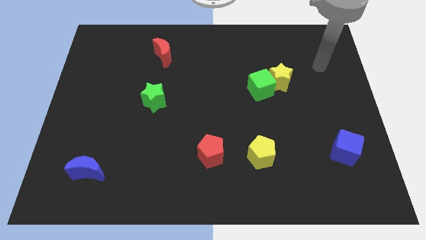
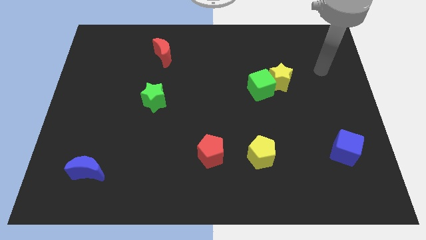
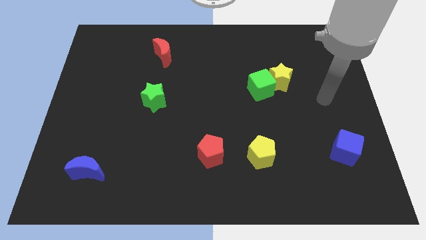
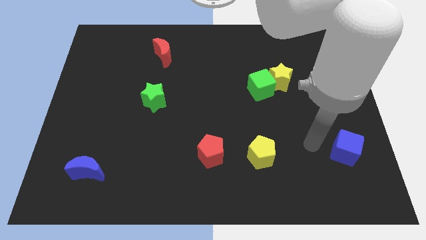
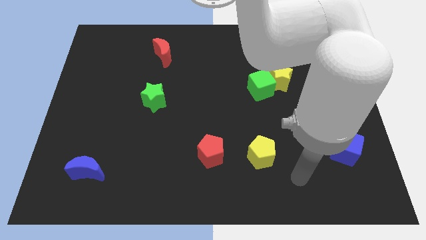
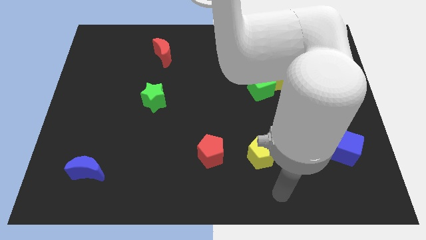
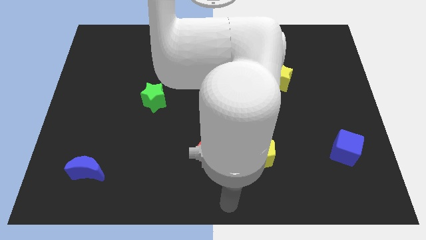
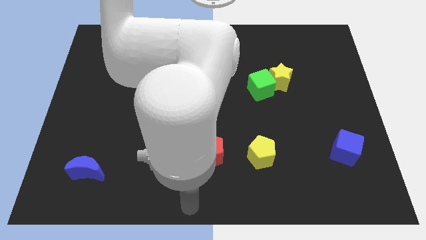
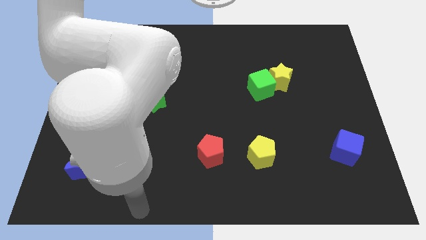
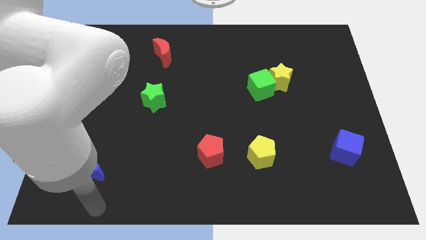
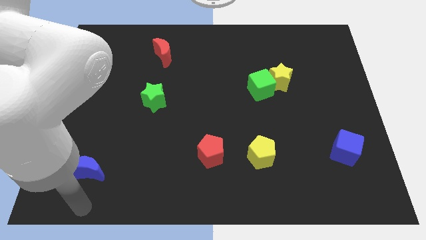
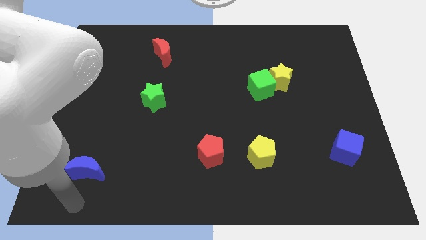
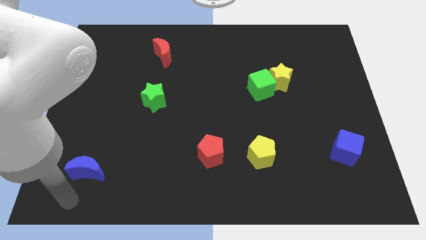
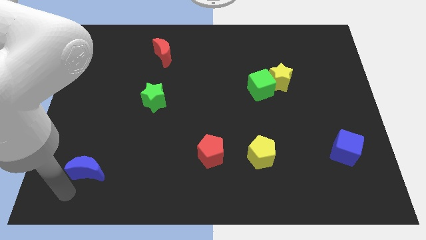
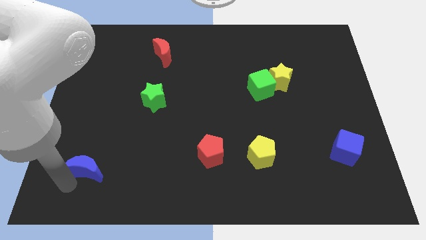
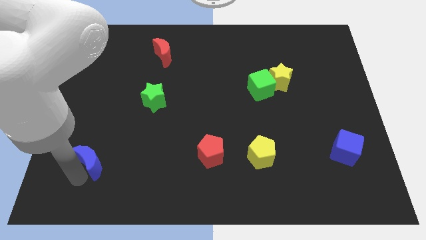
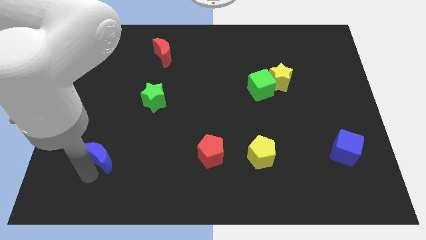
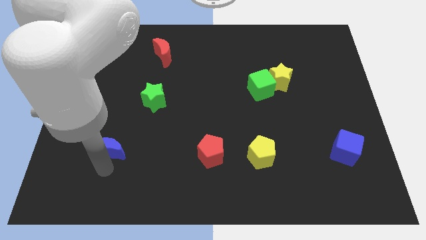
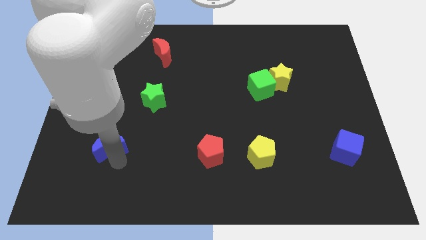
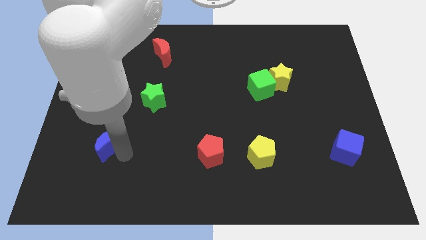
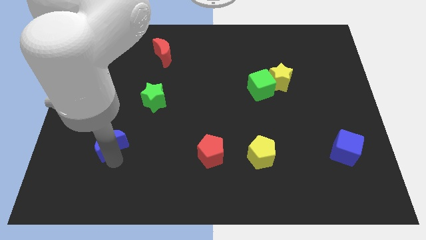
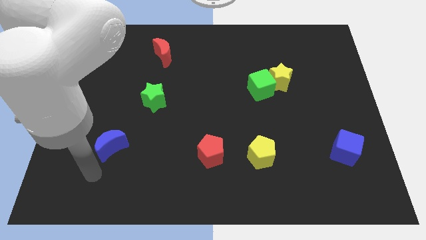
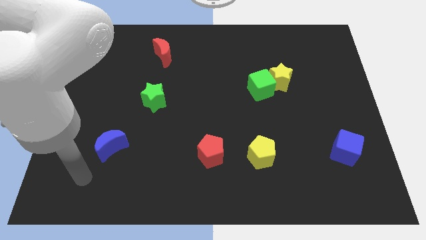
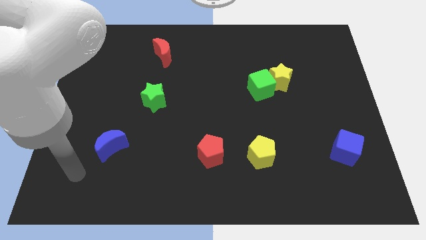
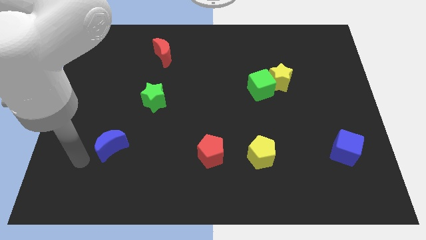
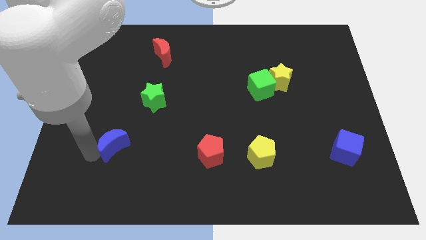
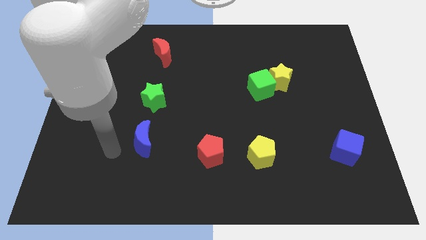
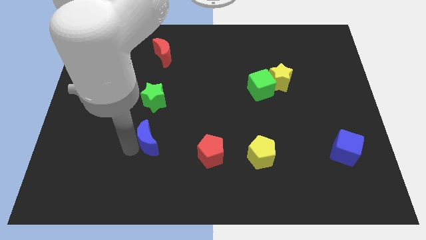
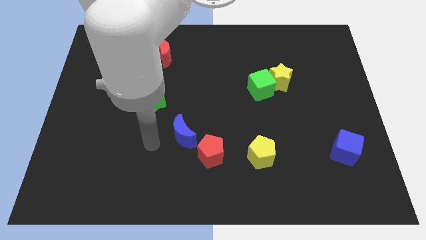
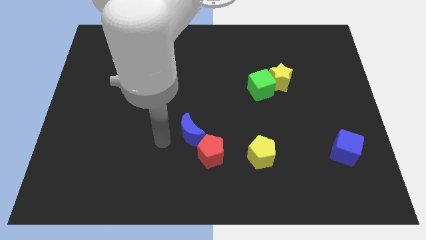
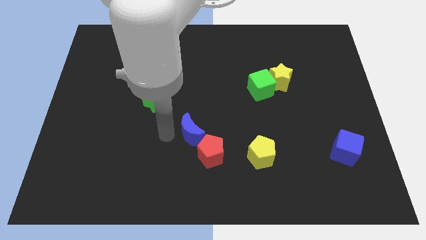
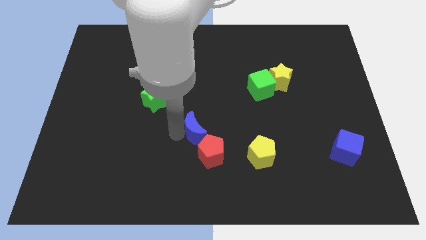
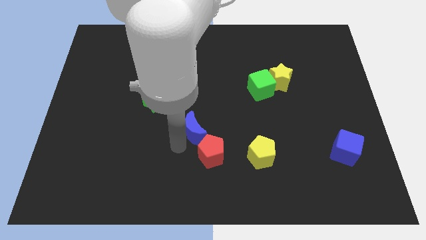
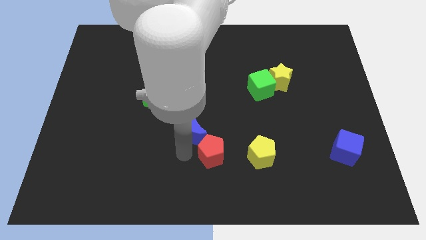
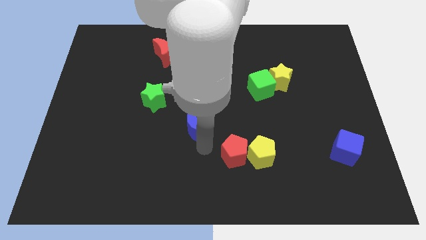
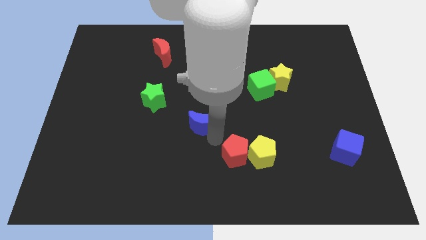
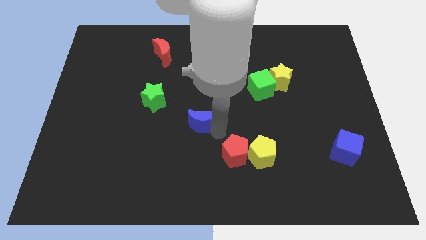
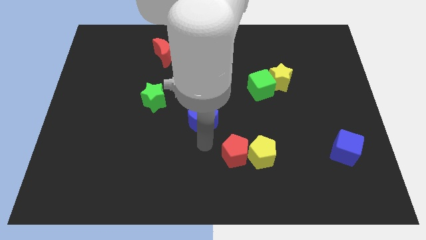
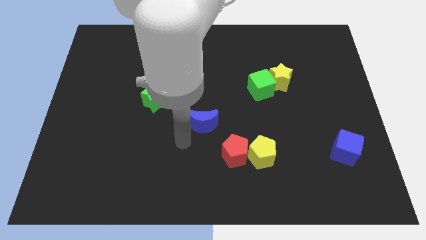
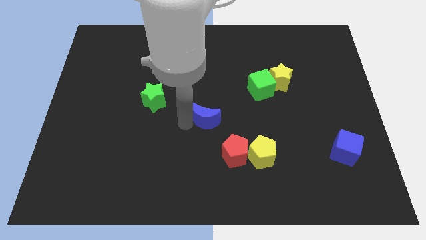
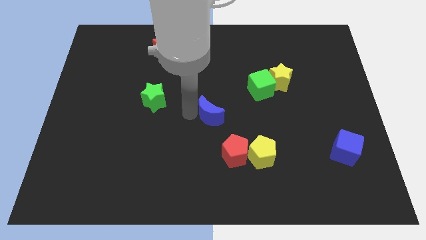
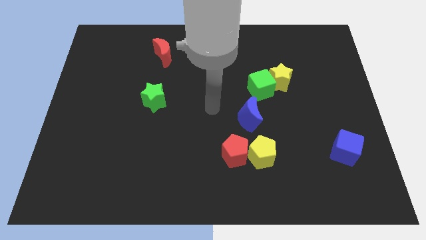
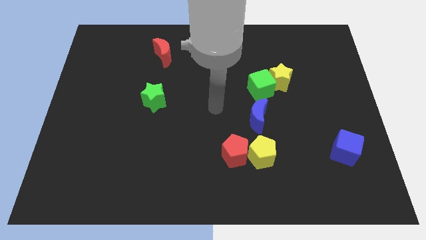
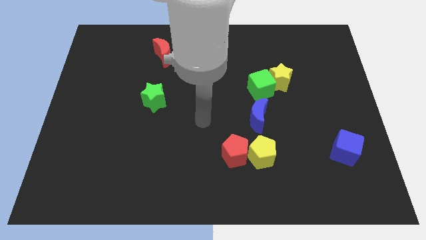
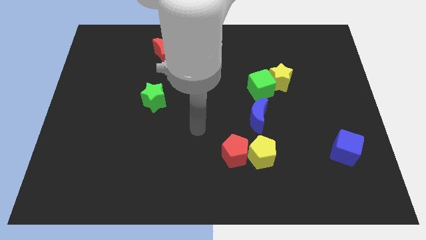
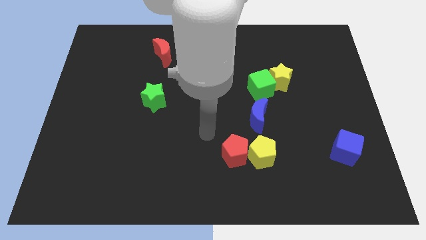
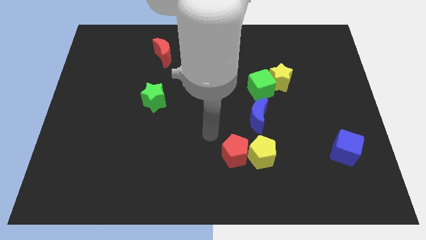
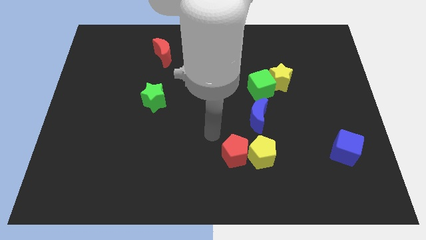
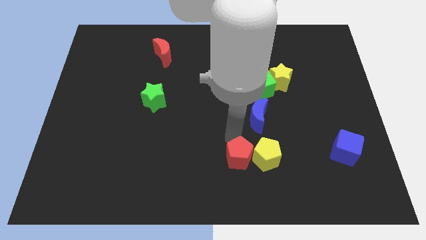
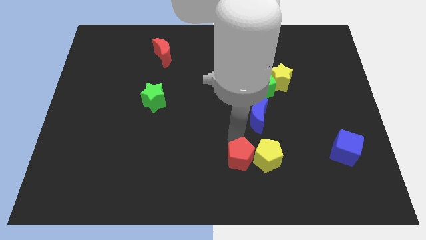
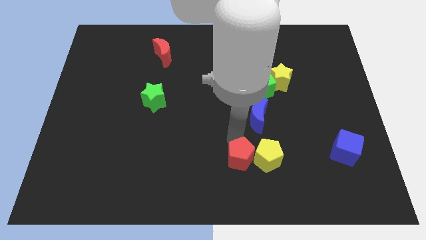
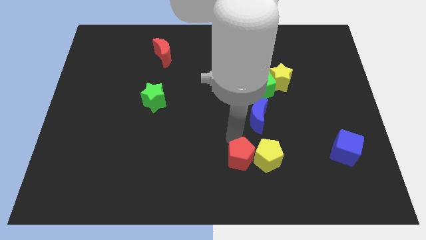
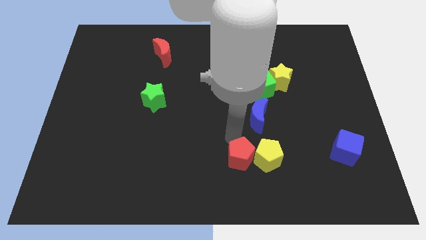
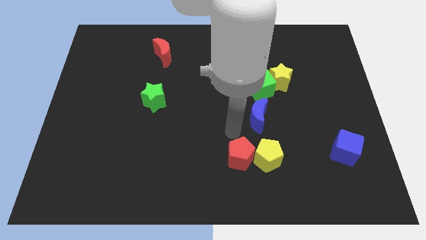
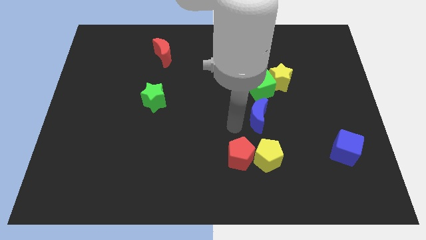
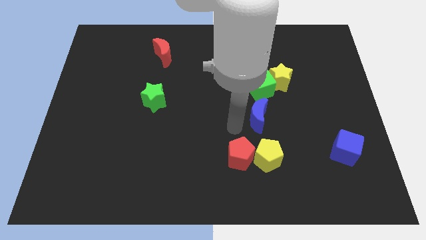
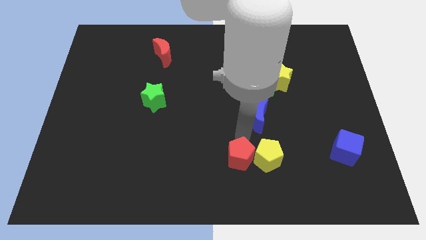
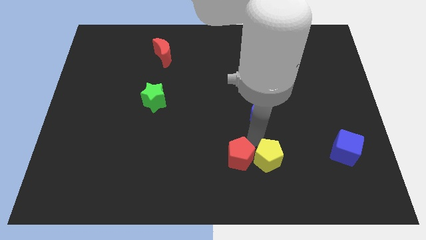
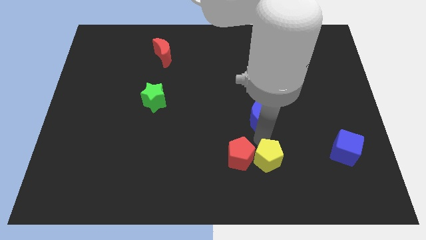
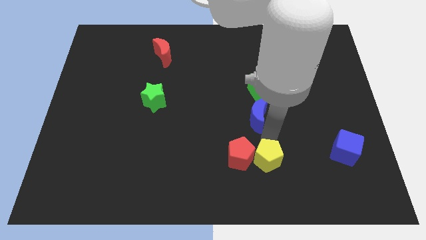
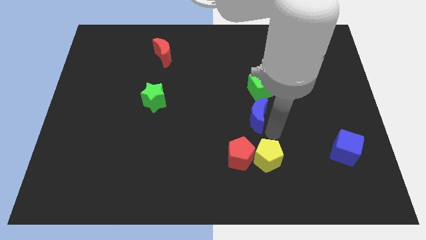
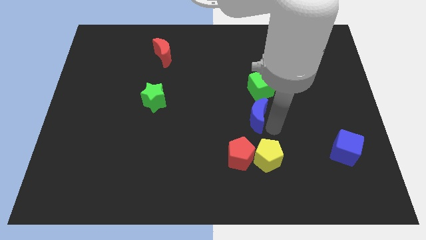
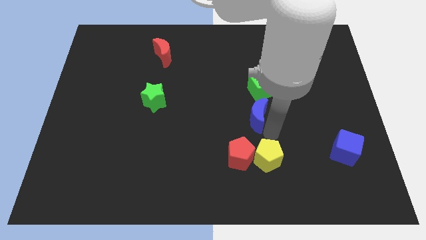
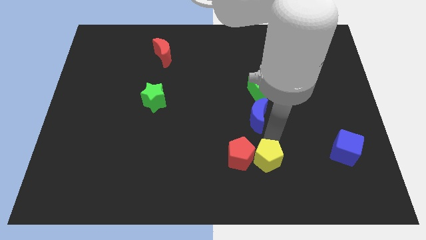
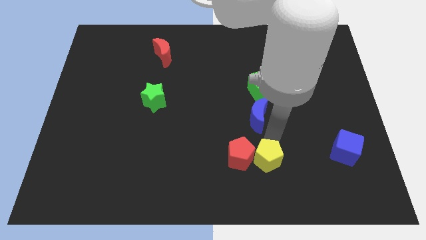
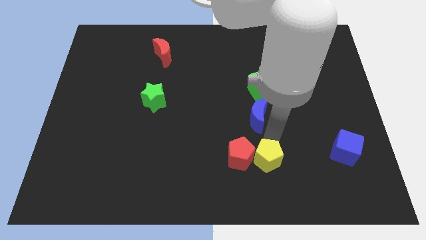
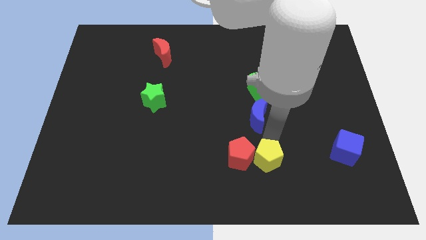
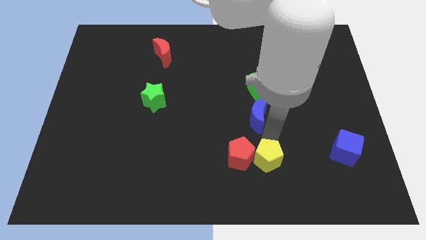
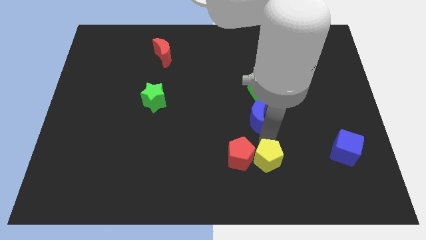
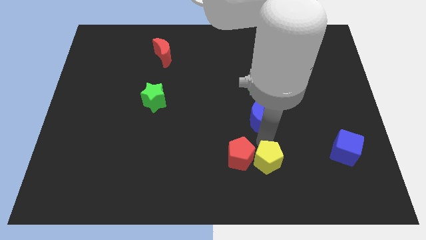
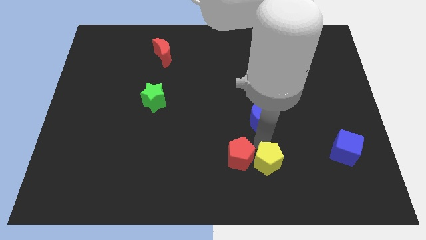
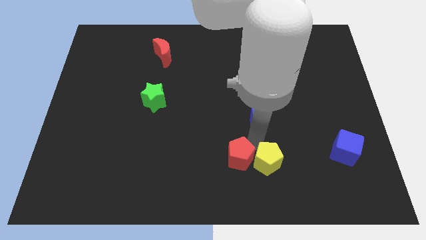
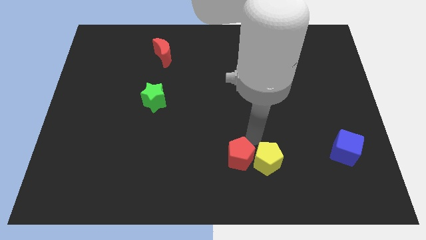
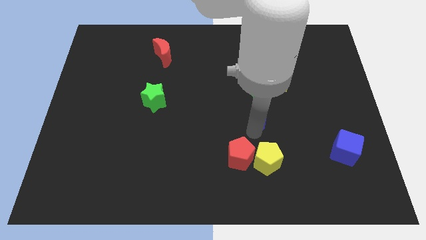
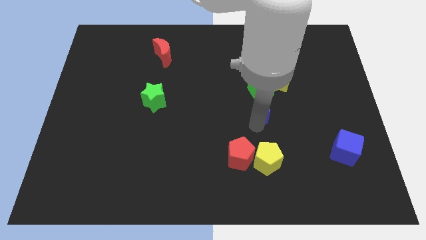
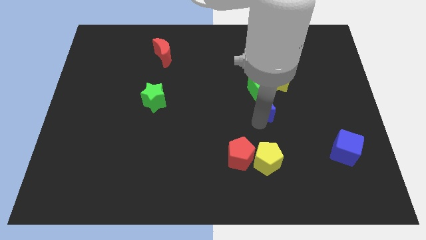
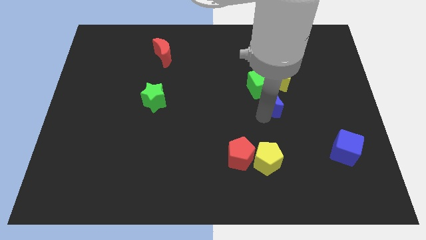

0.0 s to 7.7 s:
move the blue moon next to the green cube

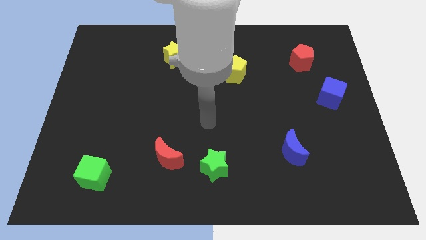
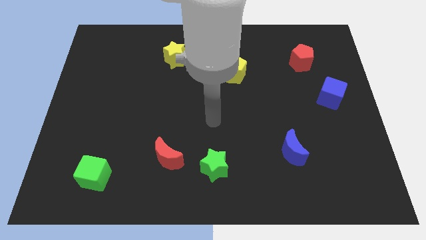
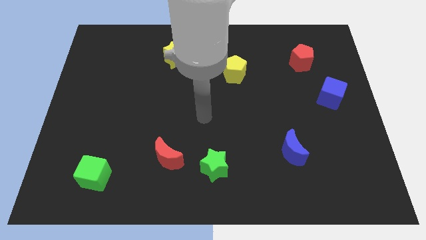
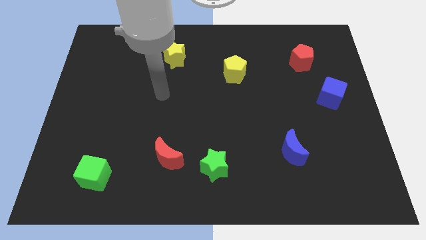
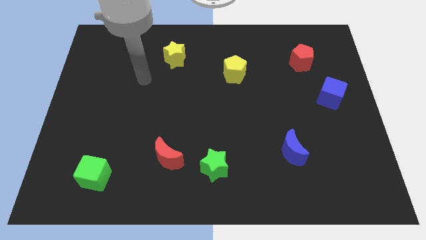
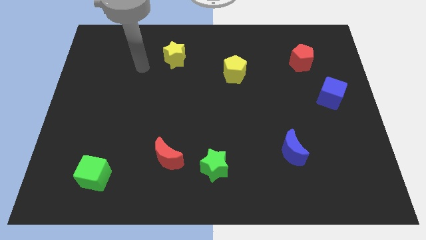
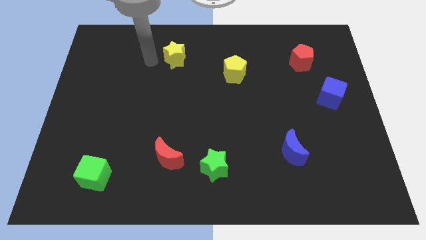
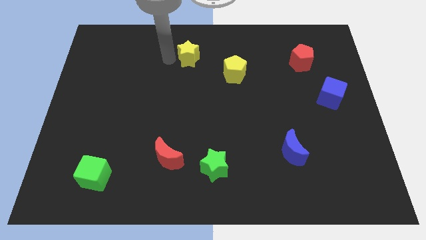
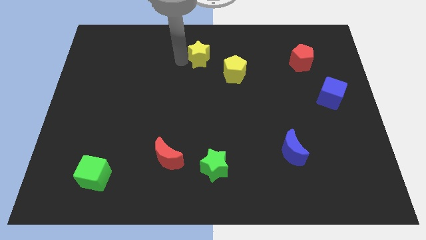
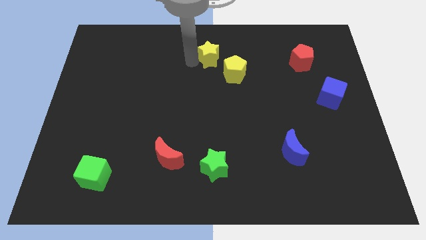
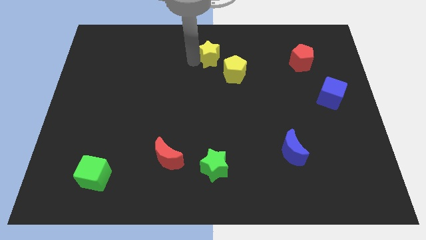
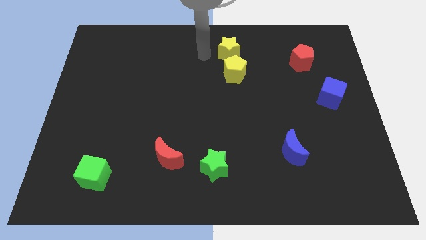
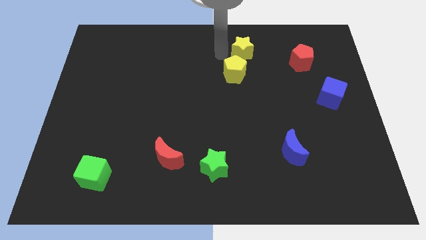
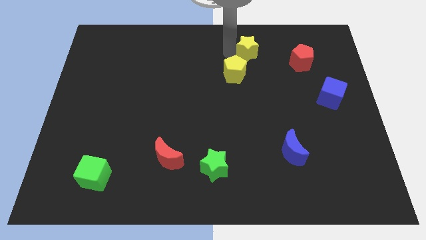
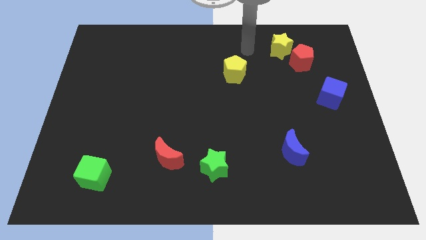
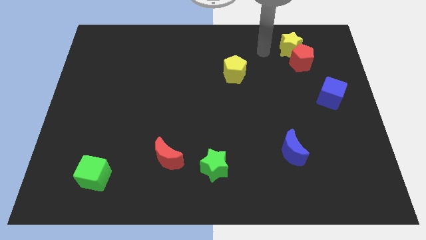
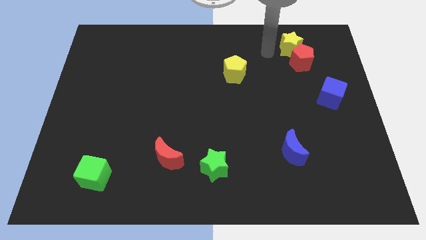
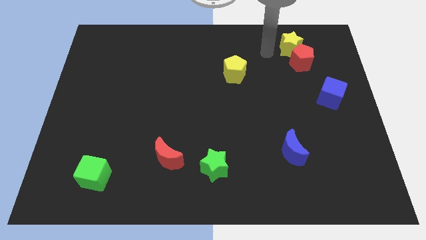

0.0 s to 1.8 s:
put the yellow star towards the red pentagon
